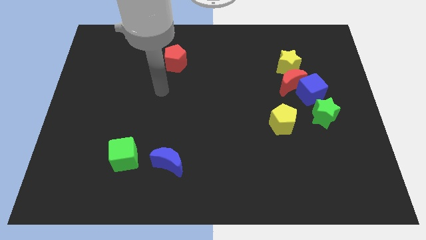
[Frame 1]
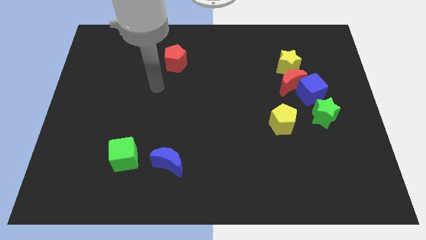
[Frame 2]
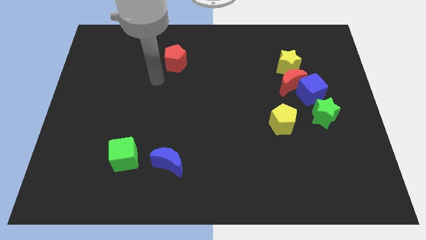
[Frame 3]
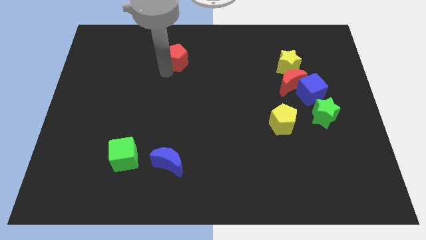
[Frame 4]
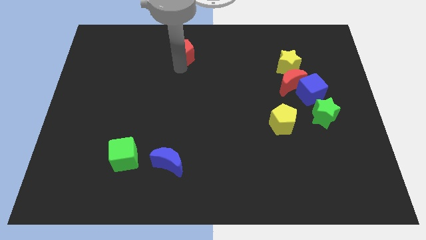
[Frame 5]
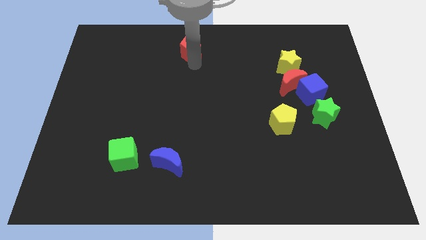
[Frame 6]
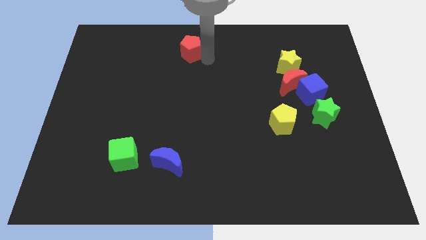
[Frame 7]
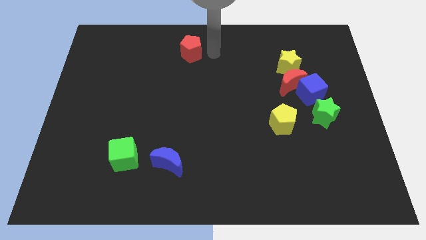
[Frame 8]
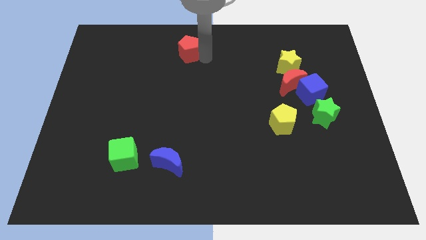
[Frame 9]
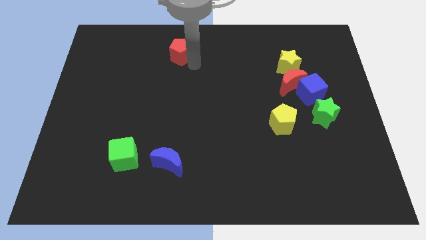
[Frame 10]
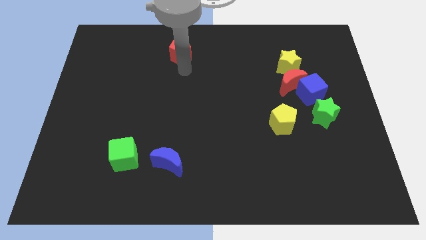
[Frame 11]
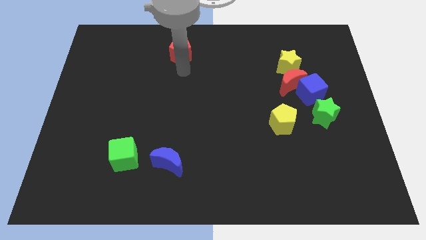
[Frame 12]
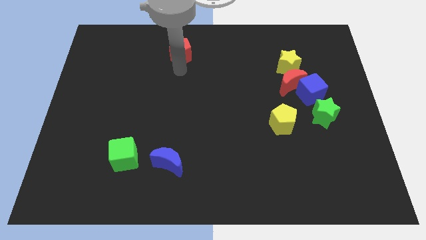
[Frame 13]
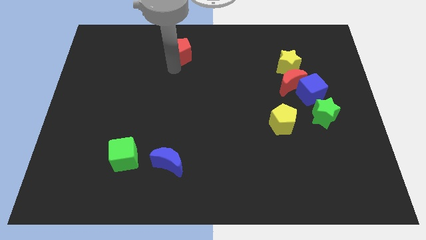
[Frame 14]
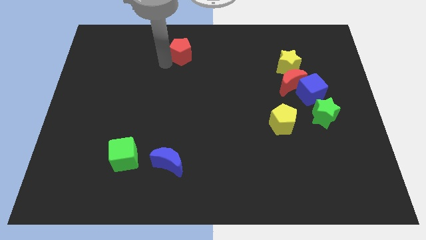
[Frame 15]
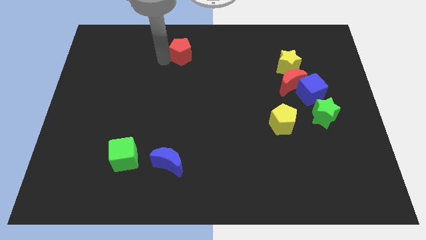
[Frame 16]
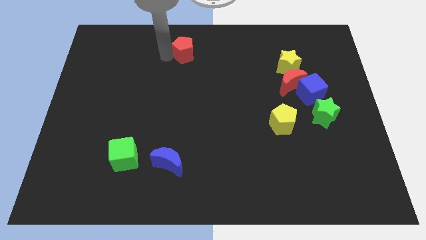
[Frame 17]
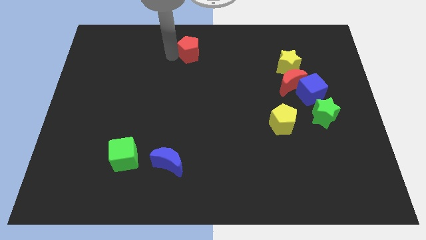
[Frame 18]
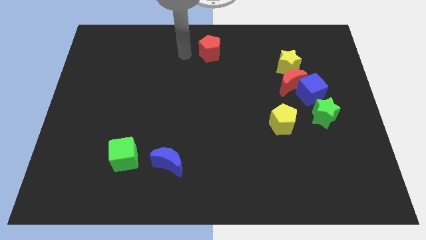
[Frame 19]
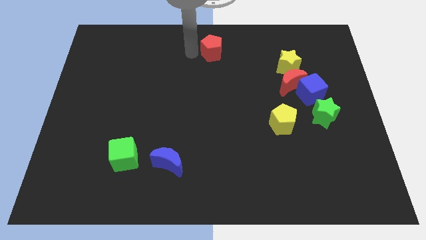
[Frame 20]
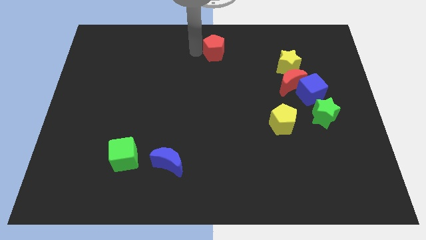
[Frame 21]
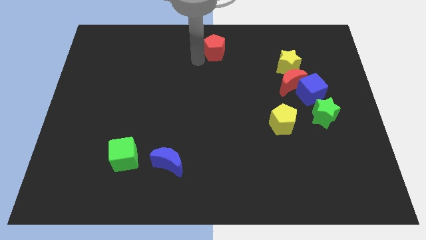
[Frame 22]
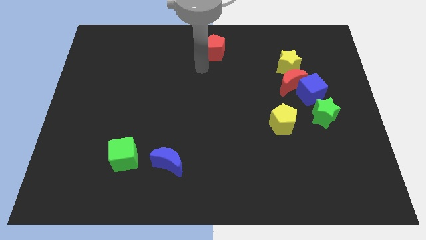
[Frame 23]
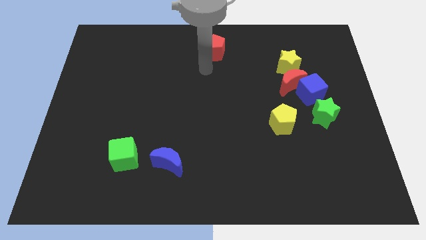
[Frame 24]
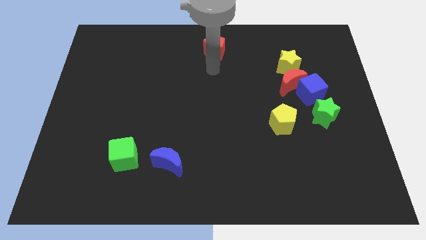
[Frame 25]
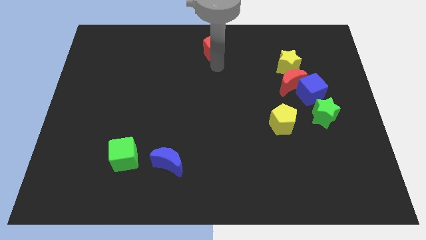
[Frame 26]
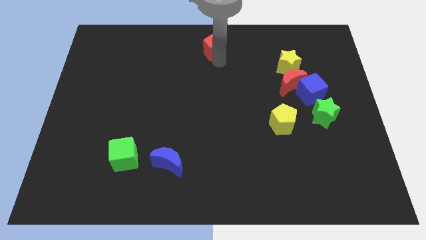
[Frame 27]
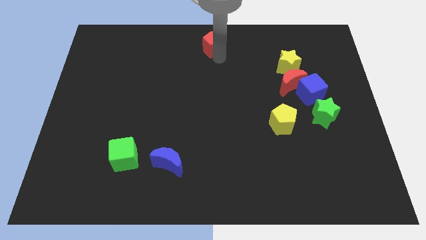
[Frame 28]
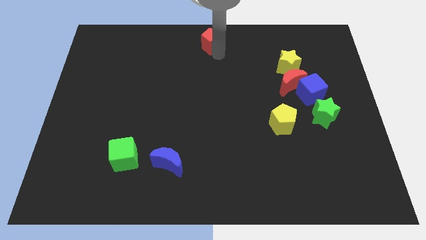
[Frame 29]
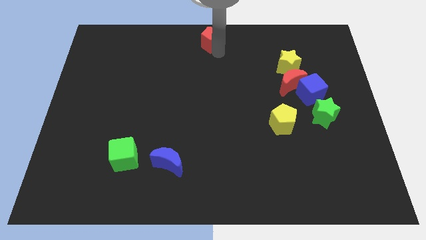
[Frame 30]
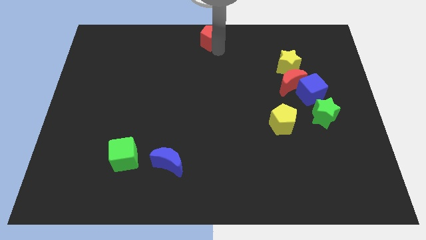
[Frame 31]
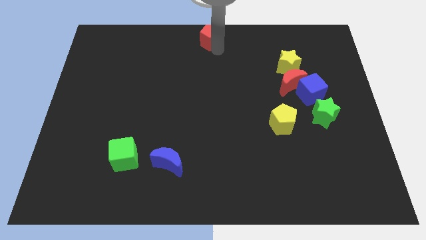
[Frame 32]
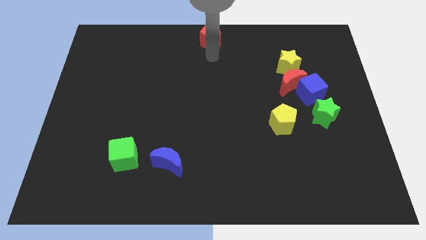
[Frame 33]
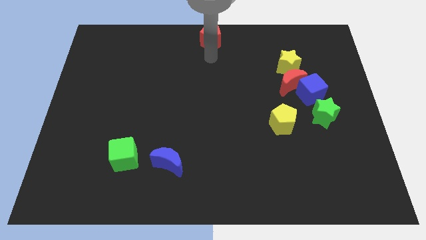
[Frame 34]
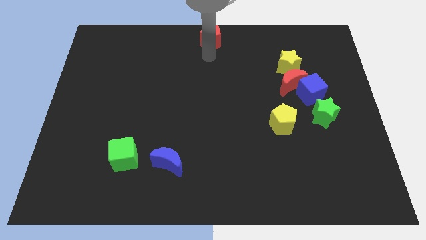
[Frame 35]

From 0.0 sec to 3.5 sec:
move your arm towards the bottom side of the red pentagon

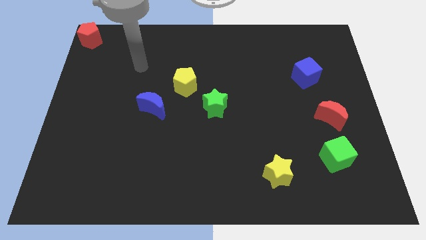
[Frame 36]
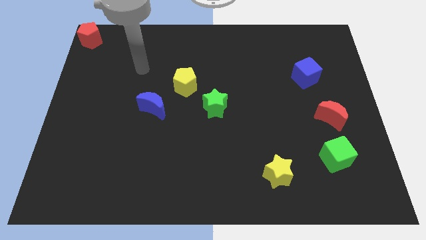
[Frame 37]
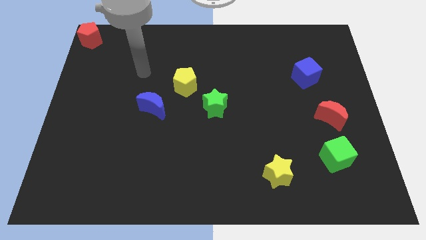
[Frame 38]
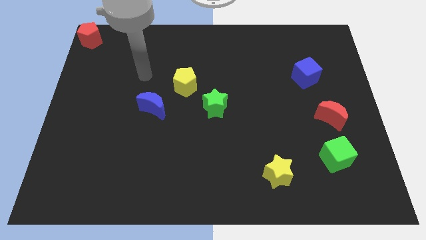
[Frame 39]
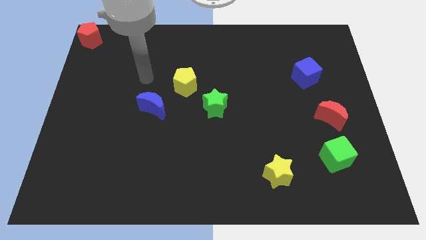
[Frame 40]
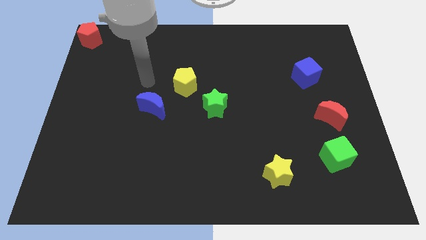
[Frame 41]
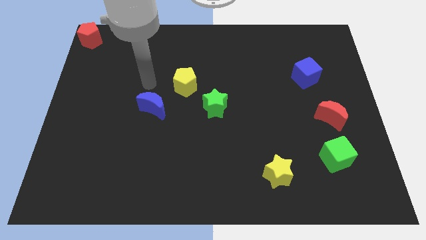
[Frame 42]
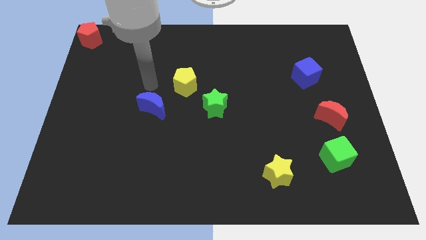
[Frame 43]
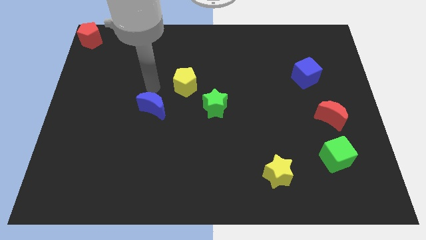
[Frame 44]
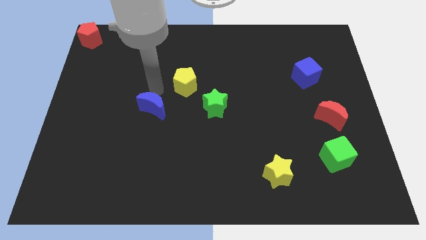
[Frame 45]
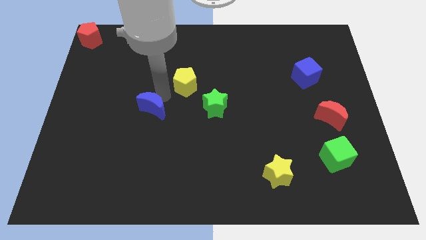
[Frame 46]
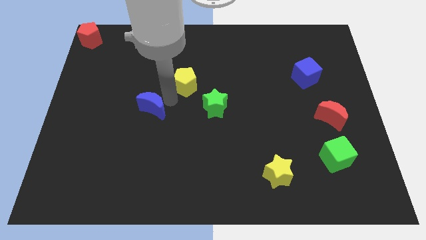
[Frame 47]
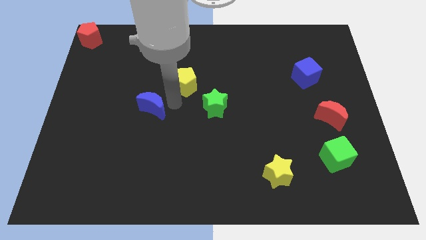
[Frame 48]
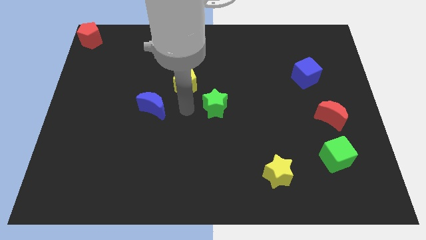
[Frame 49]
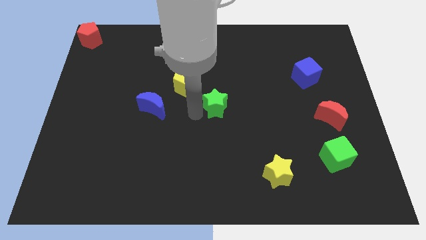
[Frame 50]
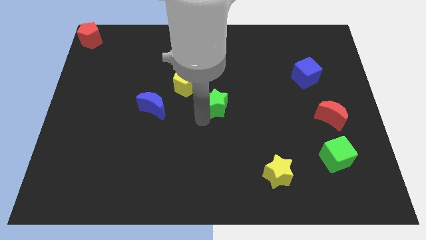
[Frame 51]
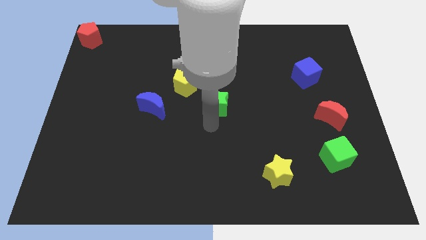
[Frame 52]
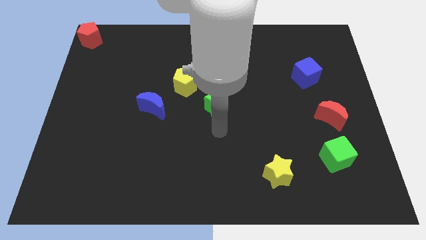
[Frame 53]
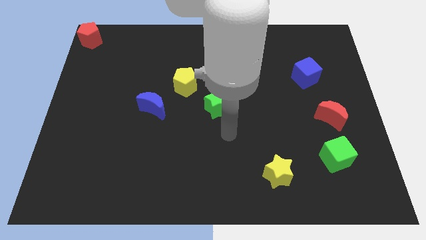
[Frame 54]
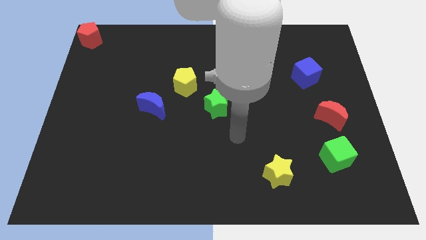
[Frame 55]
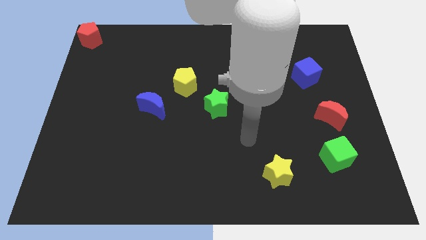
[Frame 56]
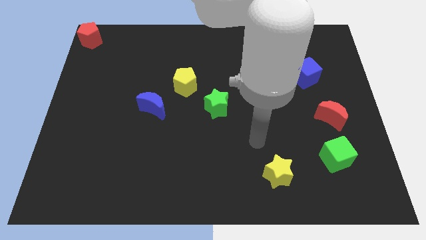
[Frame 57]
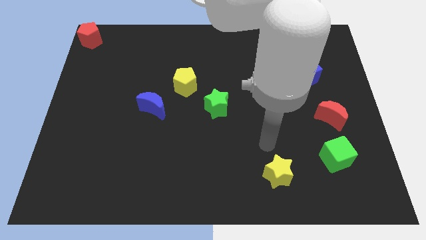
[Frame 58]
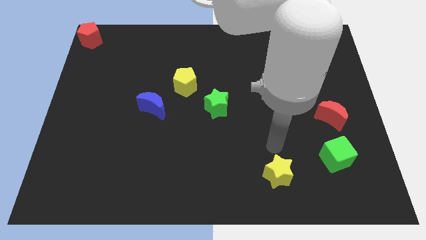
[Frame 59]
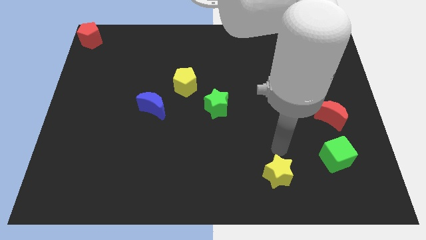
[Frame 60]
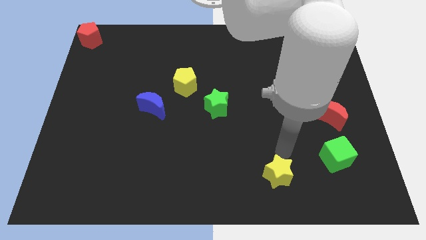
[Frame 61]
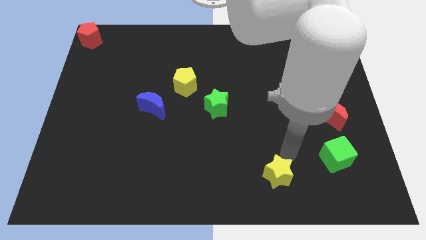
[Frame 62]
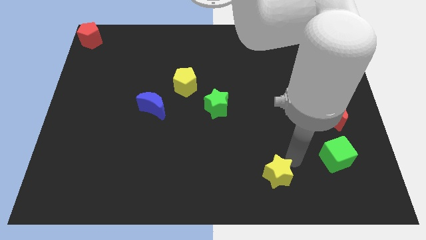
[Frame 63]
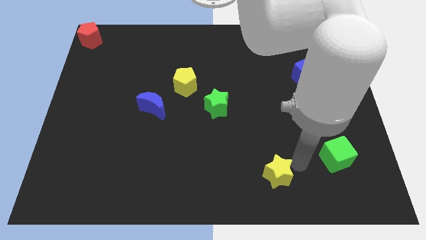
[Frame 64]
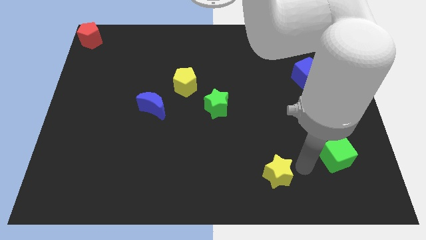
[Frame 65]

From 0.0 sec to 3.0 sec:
move the arm towards the left side of the yellow star

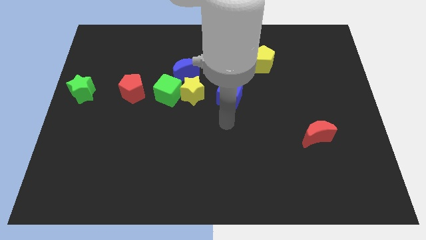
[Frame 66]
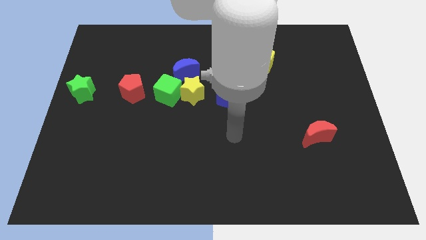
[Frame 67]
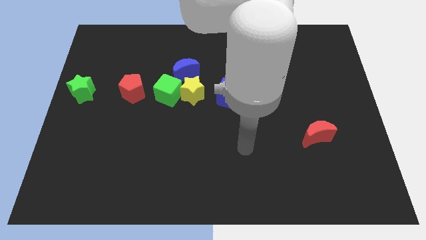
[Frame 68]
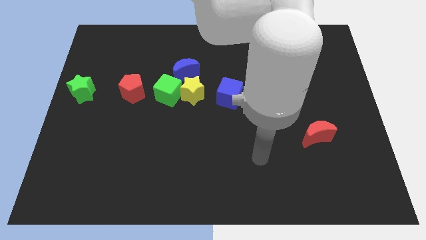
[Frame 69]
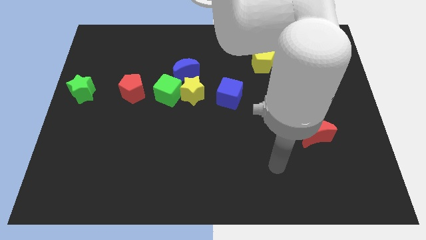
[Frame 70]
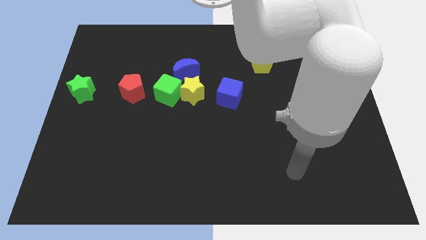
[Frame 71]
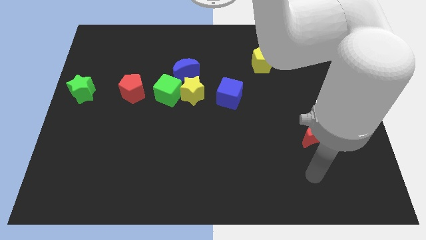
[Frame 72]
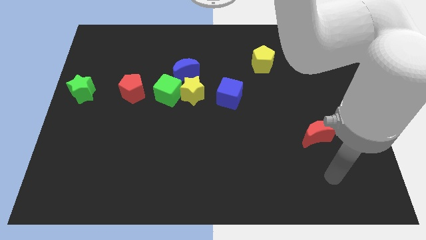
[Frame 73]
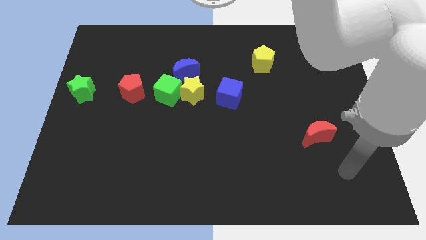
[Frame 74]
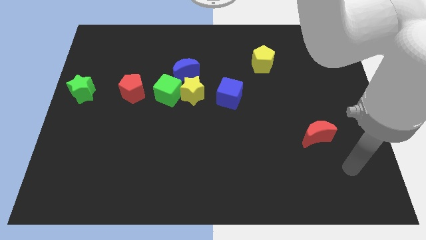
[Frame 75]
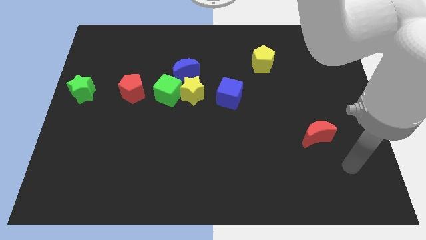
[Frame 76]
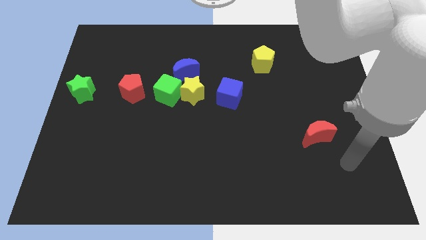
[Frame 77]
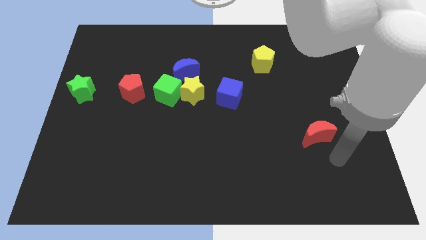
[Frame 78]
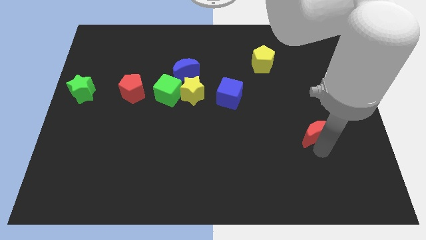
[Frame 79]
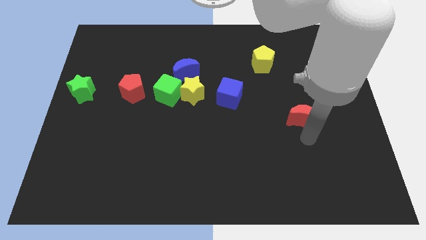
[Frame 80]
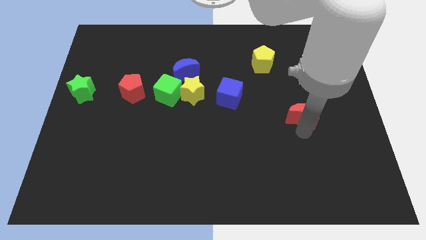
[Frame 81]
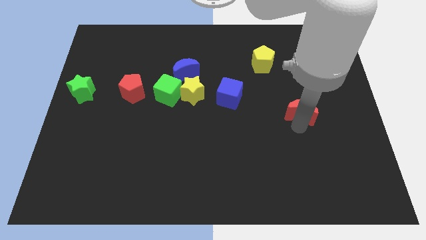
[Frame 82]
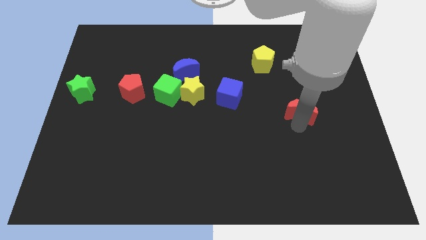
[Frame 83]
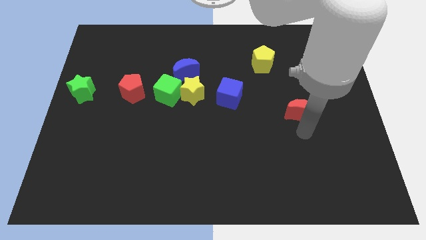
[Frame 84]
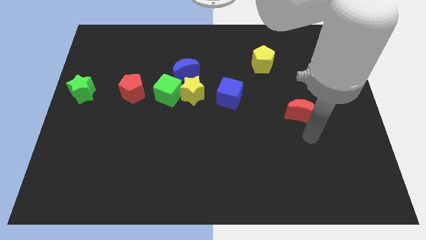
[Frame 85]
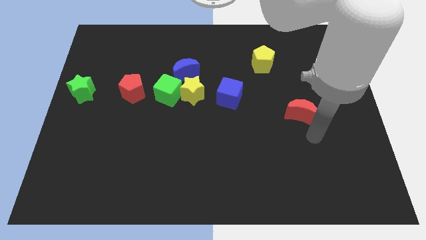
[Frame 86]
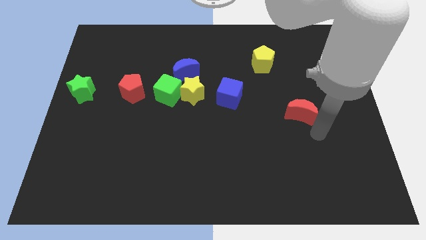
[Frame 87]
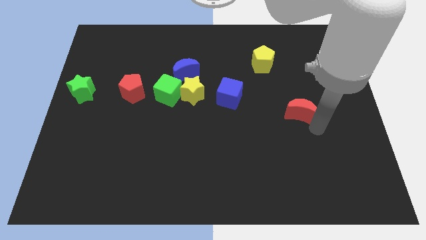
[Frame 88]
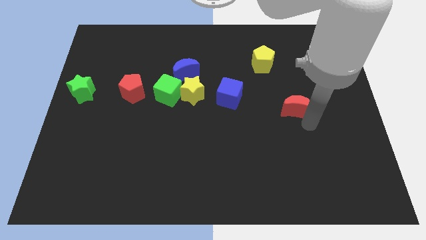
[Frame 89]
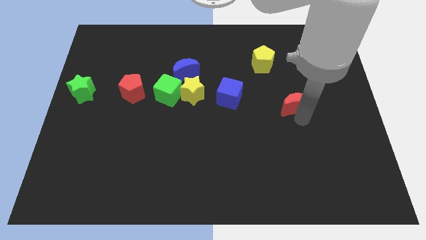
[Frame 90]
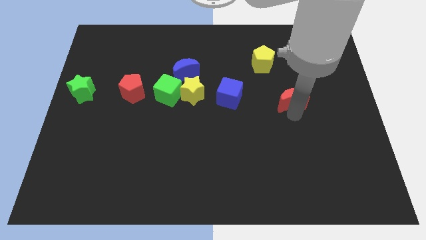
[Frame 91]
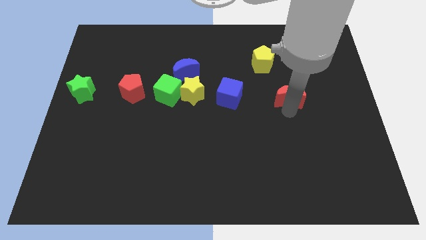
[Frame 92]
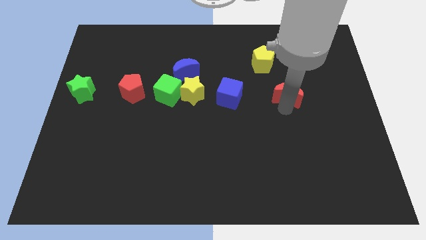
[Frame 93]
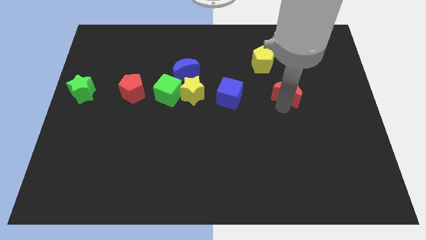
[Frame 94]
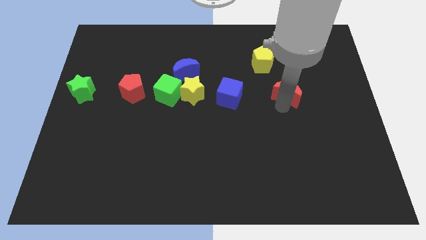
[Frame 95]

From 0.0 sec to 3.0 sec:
push the red crescent to the right of the blue cube
